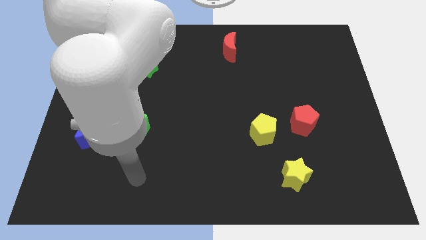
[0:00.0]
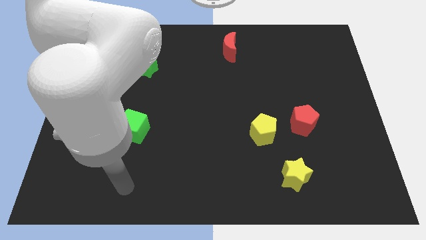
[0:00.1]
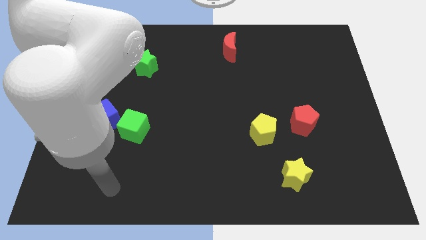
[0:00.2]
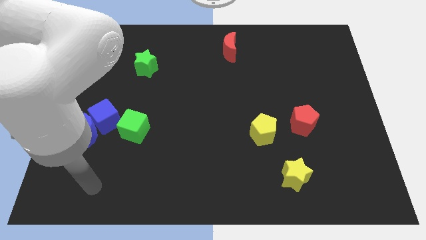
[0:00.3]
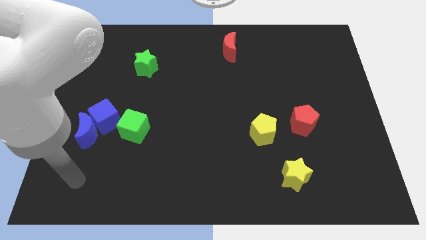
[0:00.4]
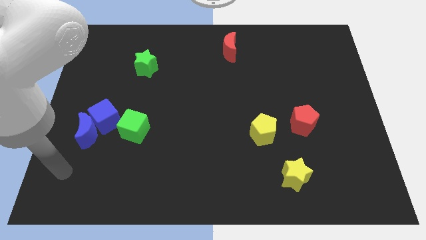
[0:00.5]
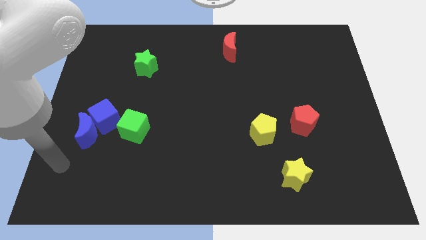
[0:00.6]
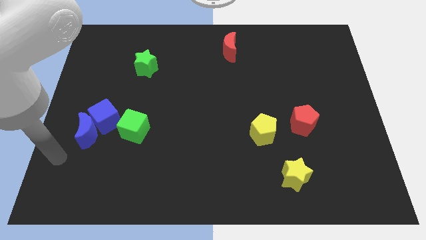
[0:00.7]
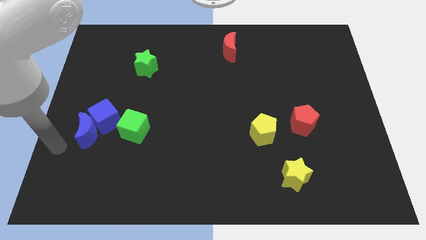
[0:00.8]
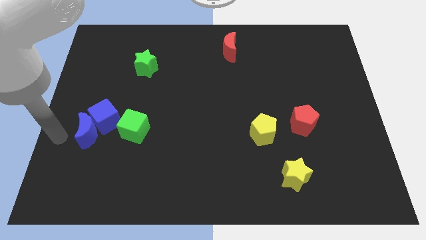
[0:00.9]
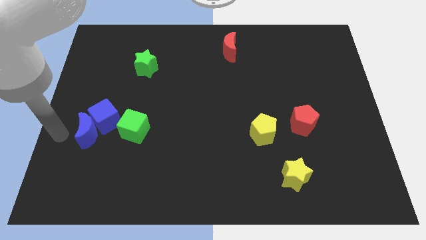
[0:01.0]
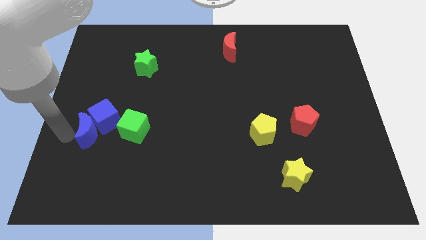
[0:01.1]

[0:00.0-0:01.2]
place the arm left to the blue moon

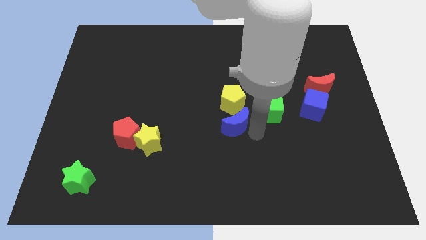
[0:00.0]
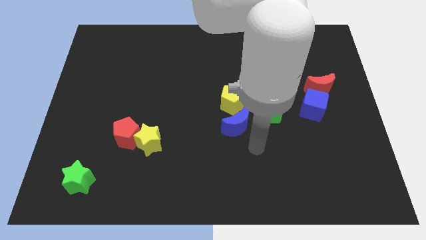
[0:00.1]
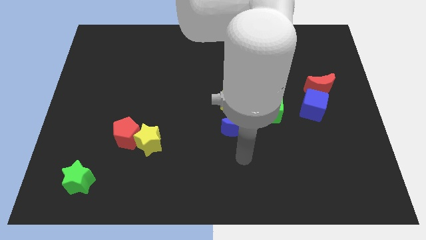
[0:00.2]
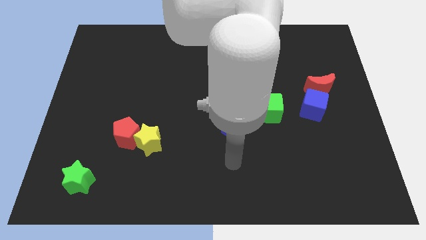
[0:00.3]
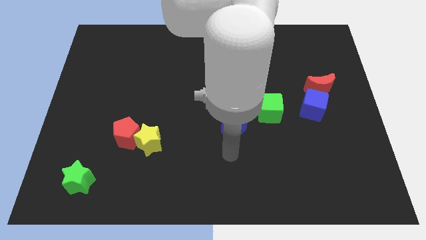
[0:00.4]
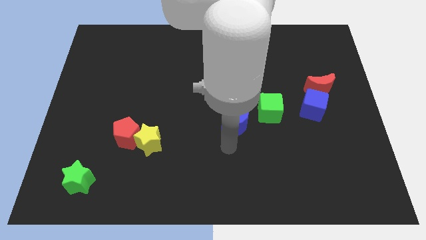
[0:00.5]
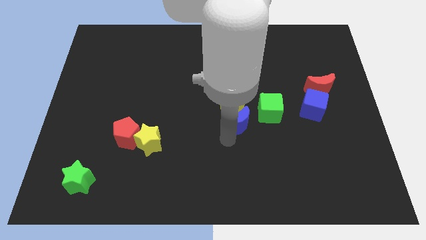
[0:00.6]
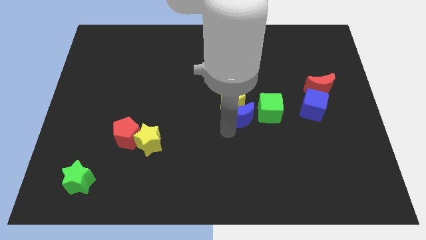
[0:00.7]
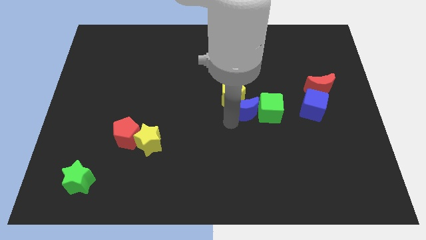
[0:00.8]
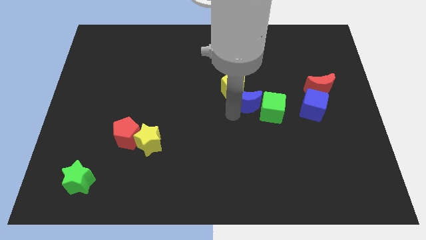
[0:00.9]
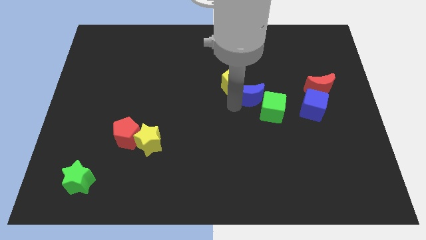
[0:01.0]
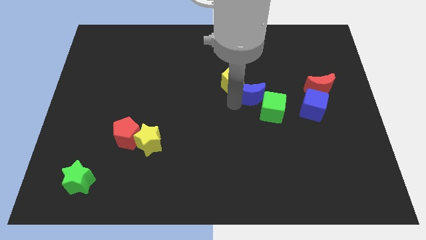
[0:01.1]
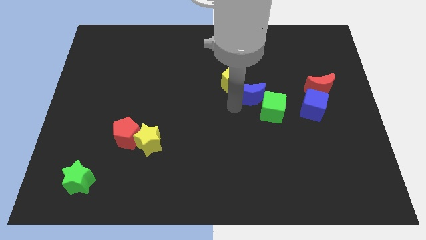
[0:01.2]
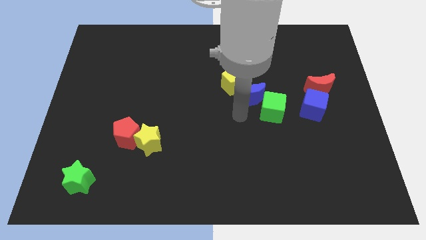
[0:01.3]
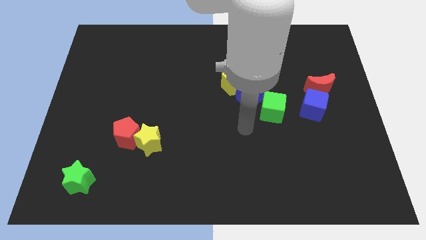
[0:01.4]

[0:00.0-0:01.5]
move the blue moon in between of yellow pentagon green cube

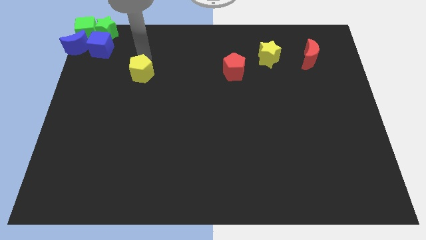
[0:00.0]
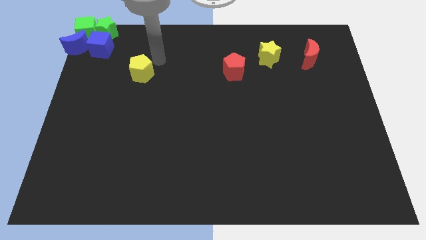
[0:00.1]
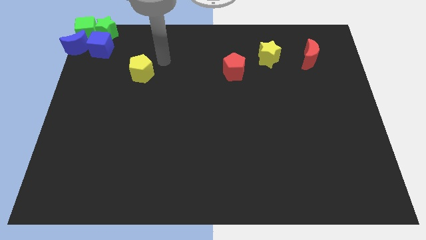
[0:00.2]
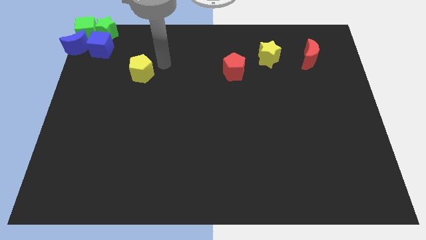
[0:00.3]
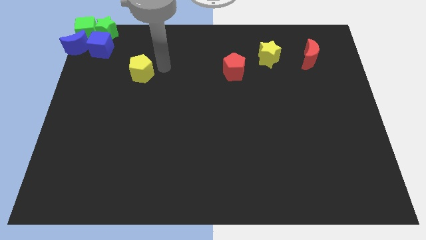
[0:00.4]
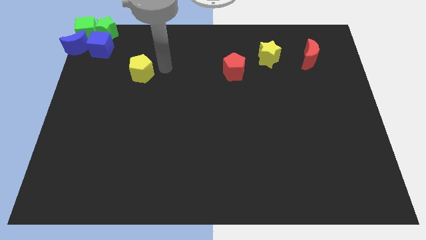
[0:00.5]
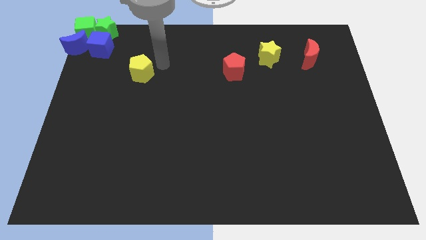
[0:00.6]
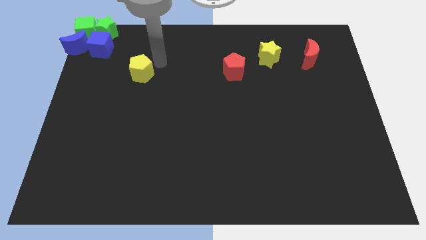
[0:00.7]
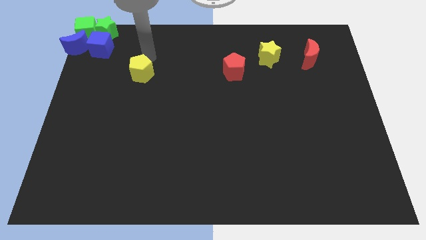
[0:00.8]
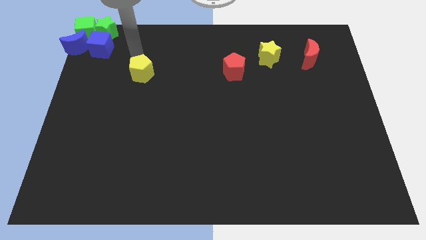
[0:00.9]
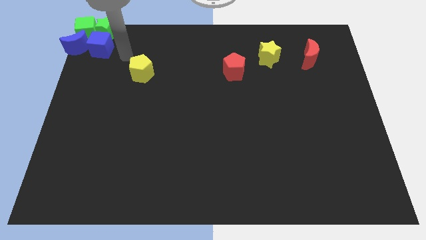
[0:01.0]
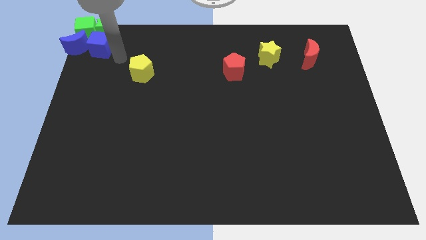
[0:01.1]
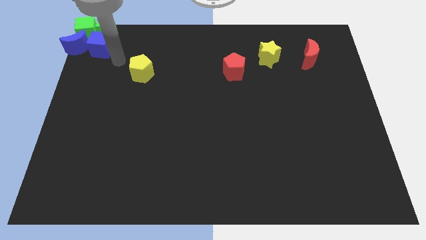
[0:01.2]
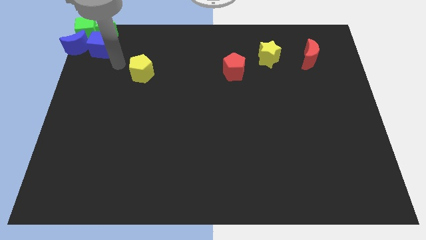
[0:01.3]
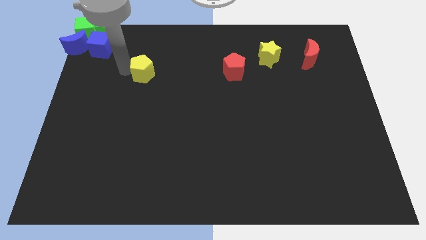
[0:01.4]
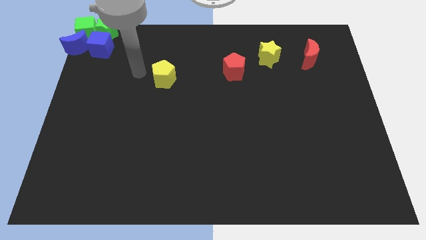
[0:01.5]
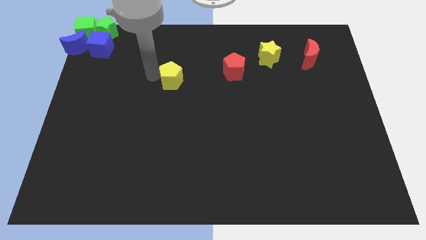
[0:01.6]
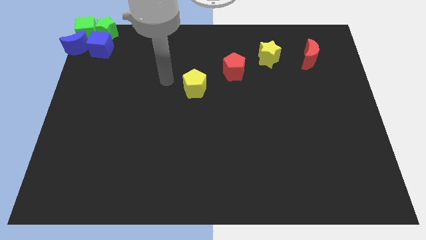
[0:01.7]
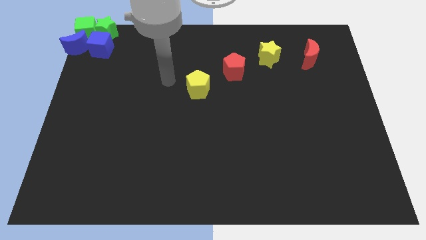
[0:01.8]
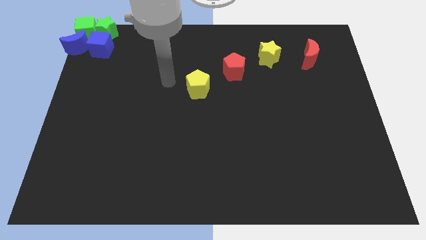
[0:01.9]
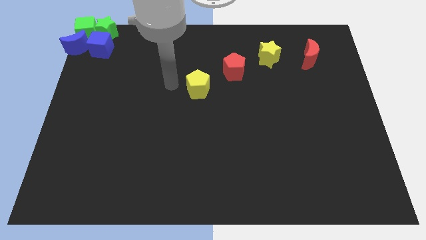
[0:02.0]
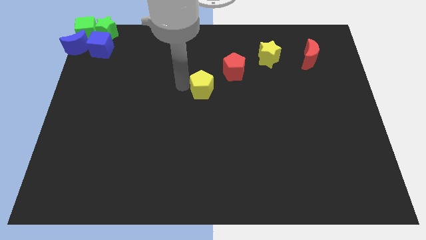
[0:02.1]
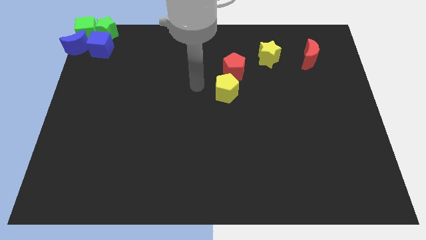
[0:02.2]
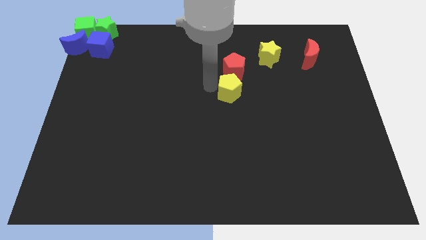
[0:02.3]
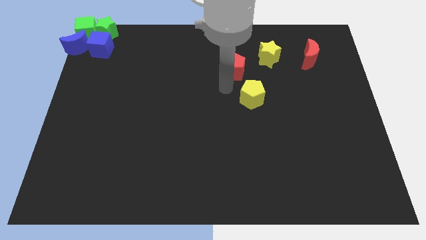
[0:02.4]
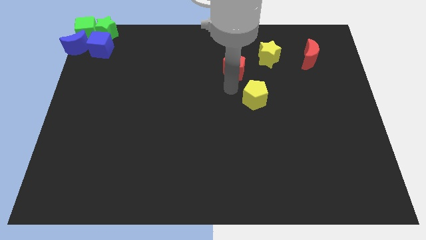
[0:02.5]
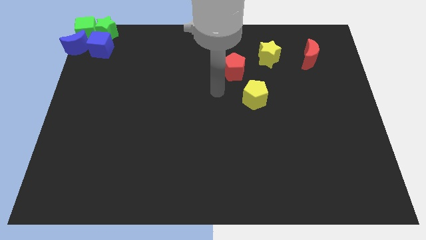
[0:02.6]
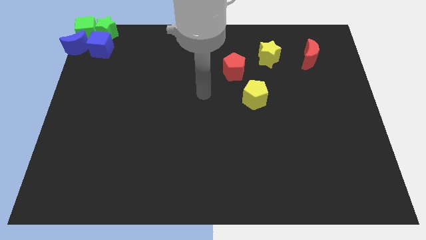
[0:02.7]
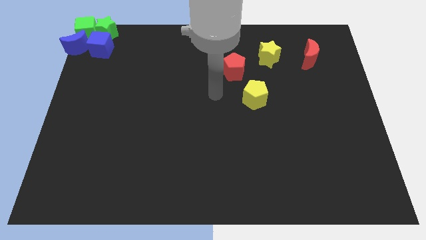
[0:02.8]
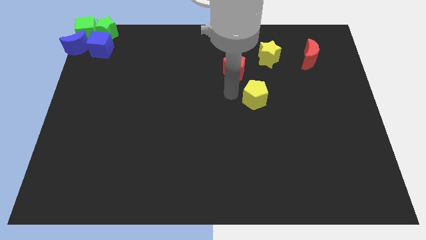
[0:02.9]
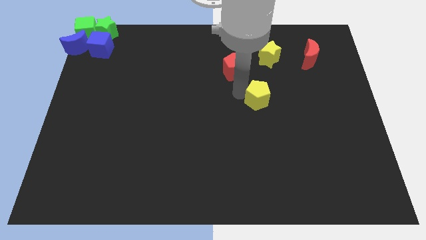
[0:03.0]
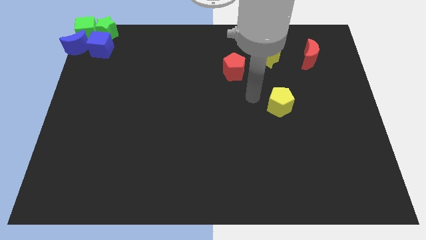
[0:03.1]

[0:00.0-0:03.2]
push the yellow pentagon to the bottom left side of the yellow star

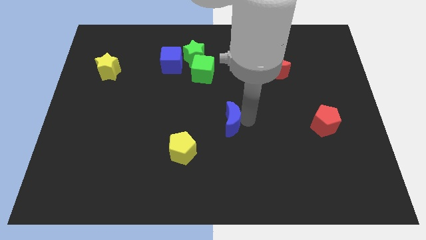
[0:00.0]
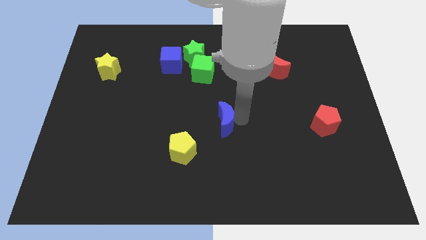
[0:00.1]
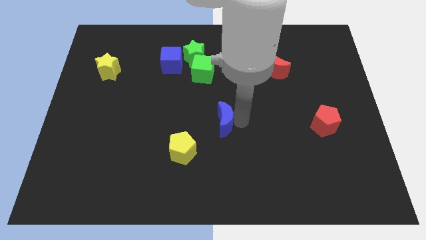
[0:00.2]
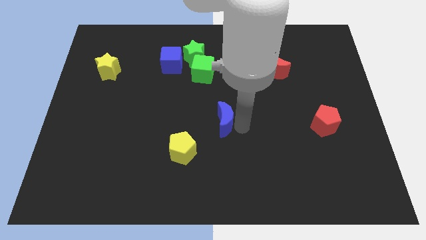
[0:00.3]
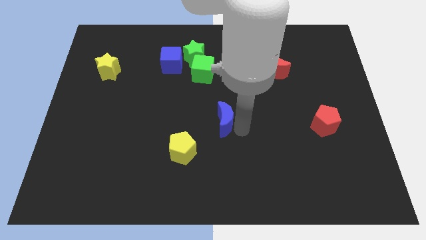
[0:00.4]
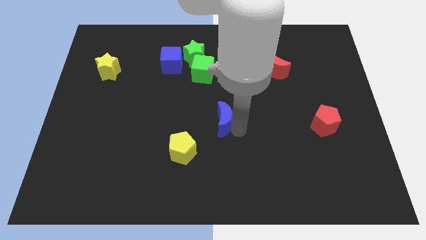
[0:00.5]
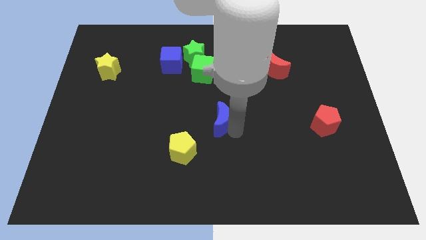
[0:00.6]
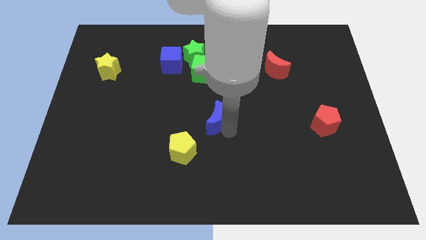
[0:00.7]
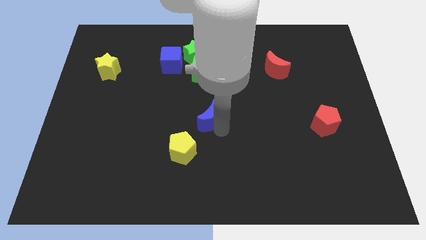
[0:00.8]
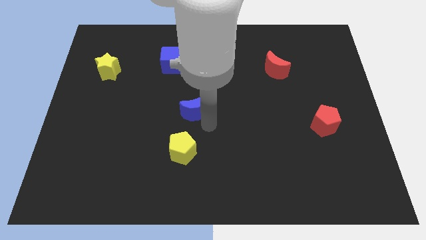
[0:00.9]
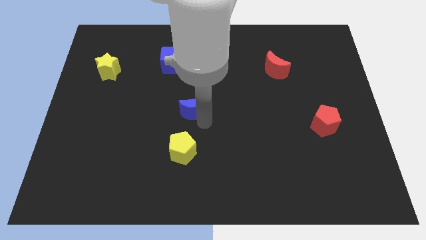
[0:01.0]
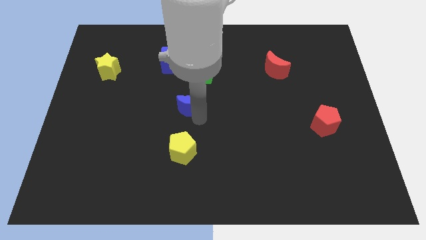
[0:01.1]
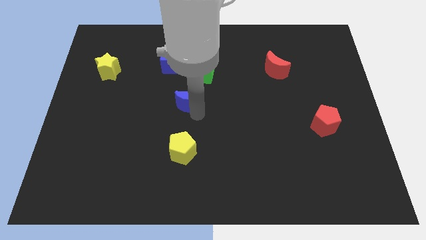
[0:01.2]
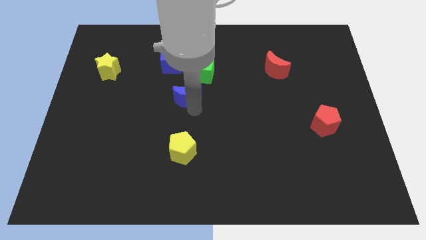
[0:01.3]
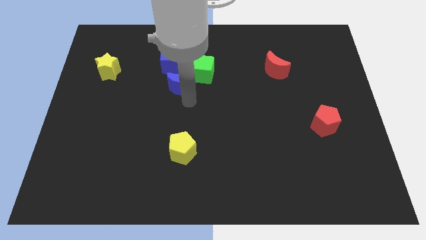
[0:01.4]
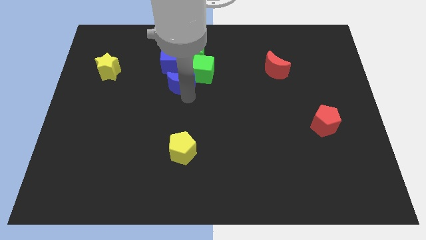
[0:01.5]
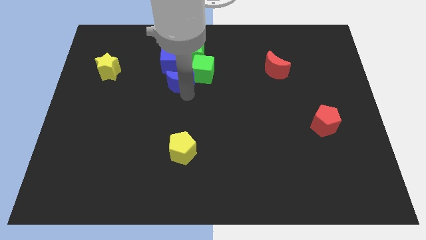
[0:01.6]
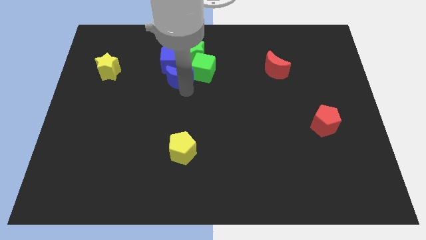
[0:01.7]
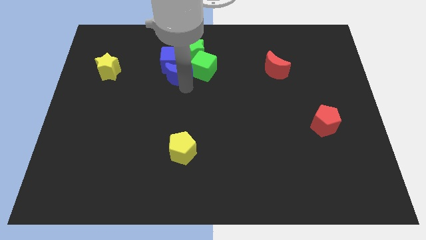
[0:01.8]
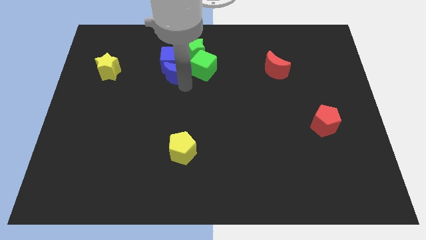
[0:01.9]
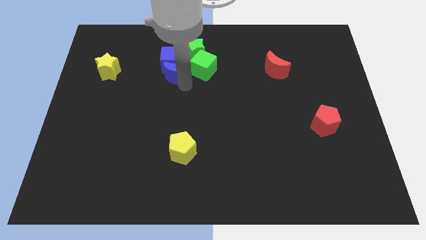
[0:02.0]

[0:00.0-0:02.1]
drag the blue moon into the group of blocks

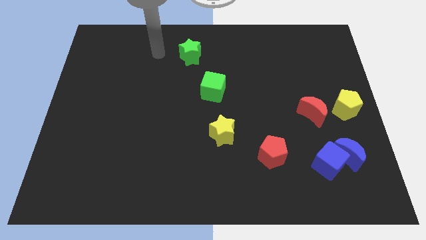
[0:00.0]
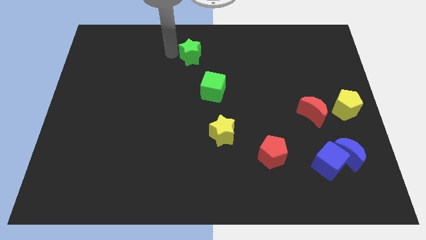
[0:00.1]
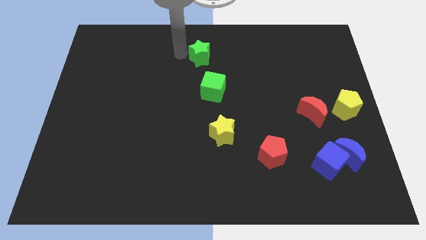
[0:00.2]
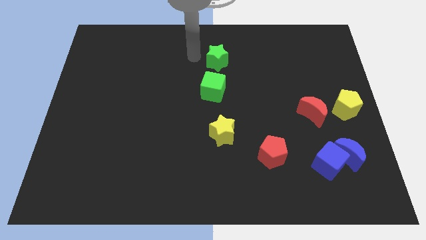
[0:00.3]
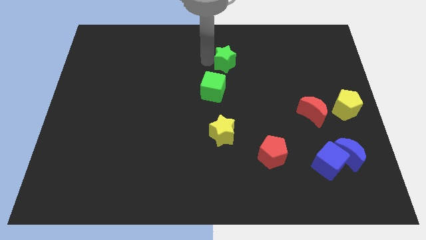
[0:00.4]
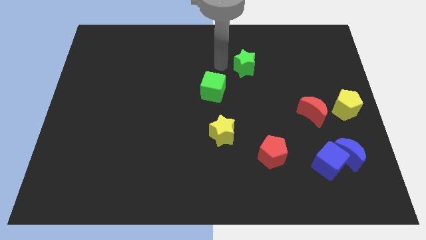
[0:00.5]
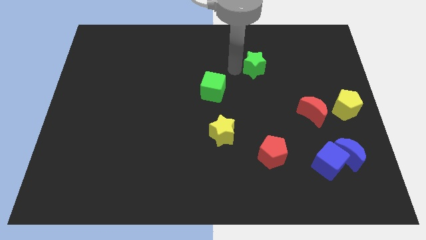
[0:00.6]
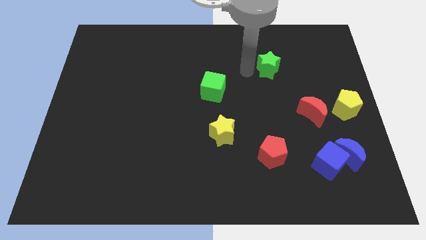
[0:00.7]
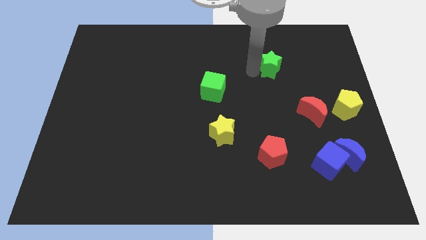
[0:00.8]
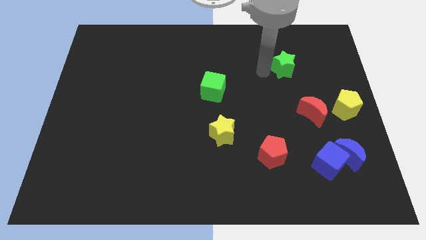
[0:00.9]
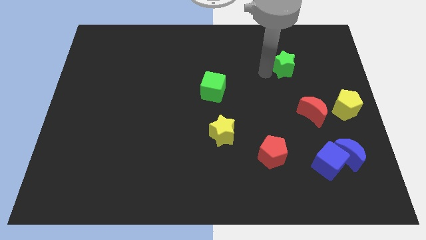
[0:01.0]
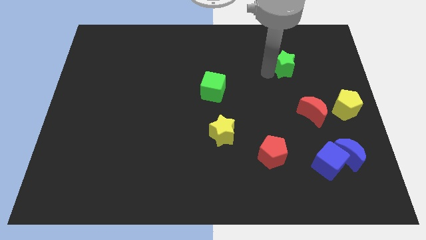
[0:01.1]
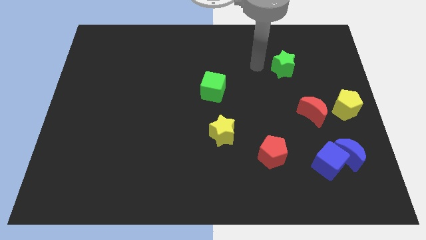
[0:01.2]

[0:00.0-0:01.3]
push the green star towards the right side of the board
